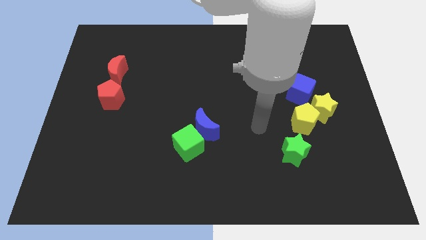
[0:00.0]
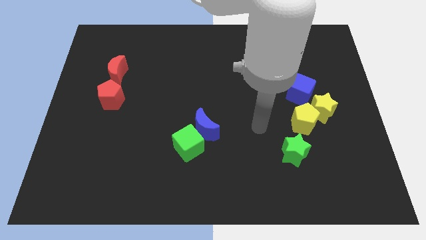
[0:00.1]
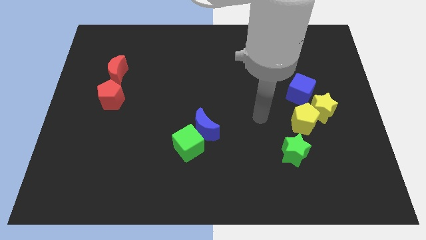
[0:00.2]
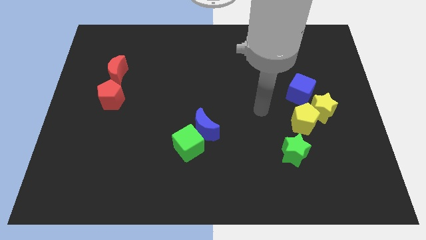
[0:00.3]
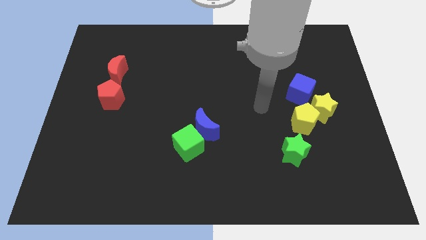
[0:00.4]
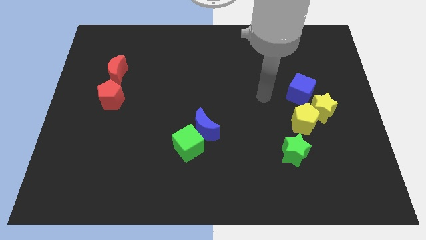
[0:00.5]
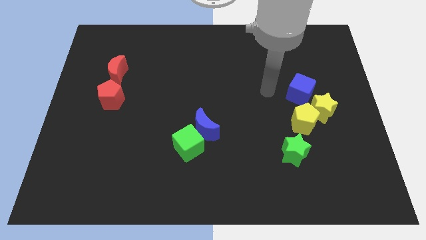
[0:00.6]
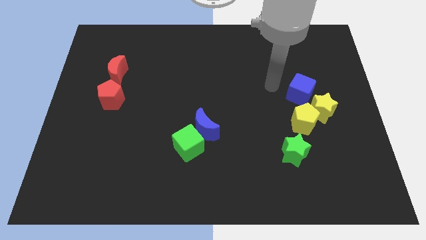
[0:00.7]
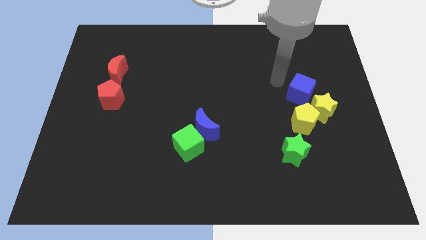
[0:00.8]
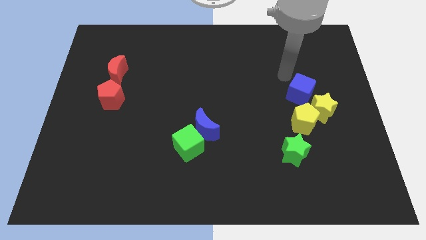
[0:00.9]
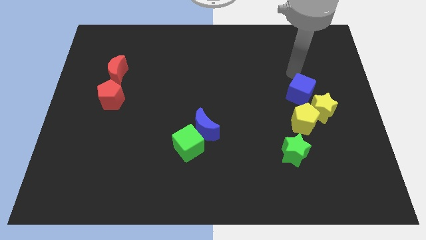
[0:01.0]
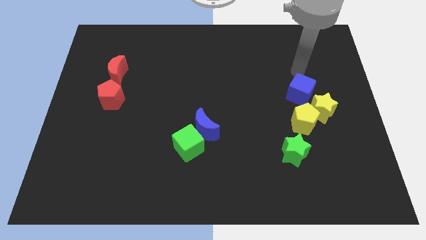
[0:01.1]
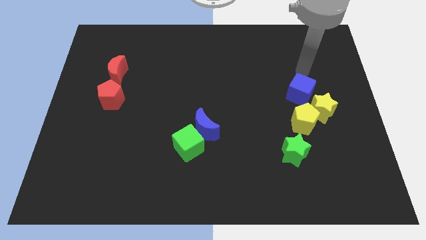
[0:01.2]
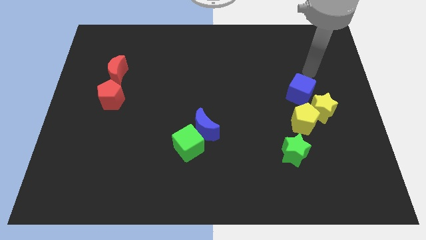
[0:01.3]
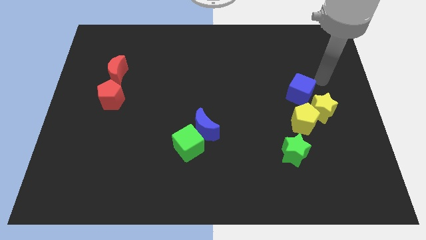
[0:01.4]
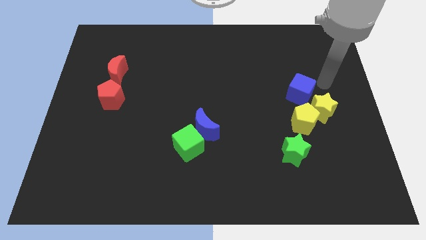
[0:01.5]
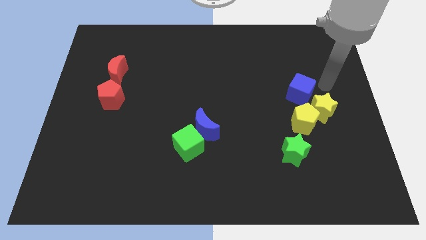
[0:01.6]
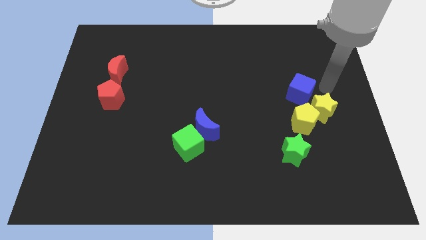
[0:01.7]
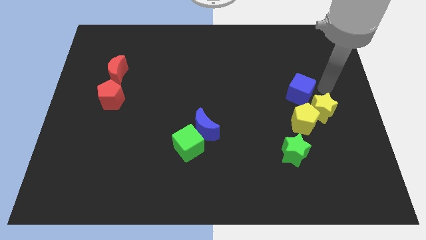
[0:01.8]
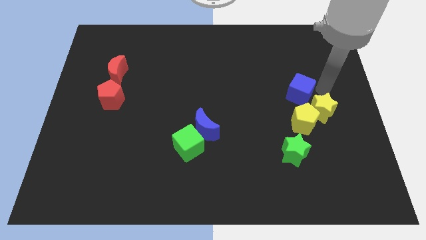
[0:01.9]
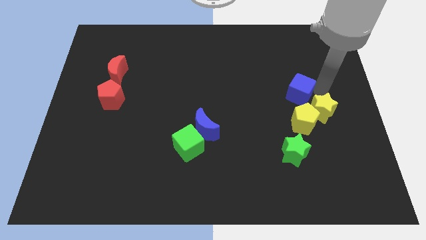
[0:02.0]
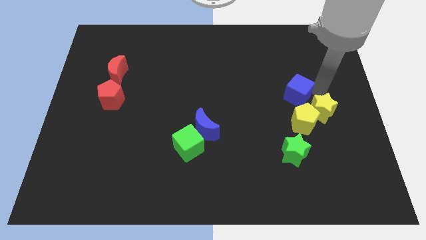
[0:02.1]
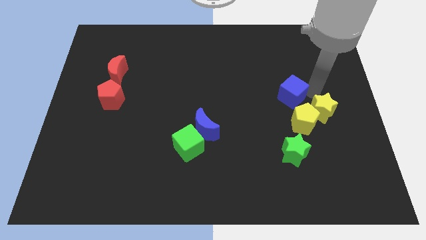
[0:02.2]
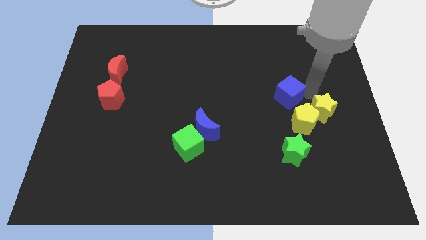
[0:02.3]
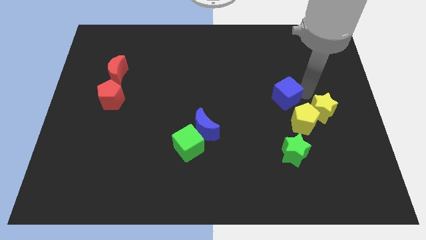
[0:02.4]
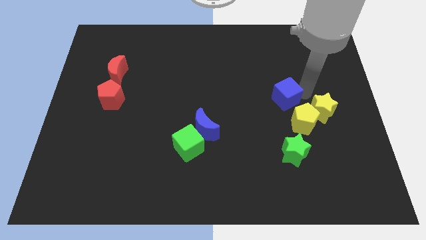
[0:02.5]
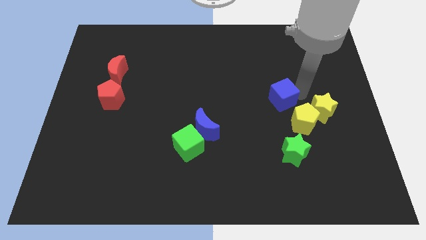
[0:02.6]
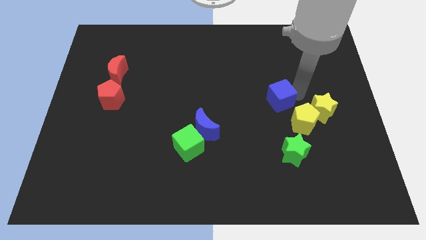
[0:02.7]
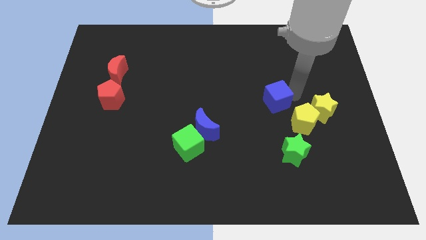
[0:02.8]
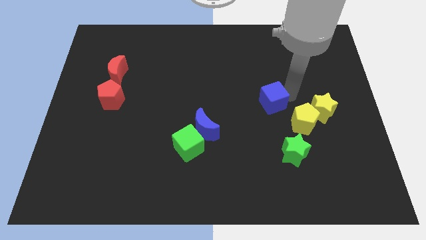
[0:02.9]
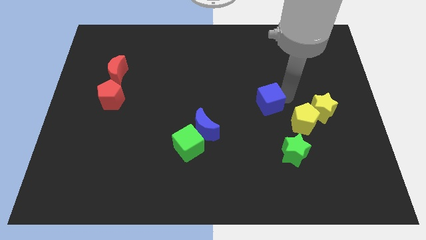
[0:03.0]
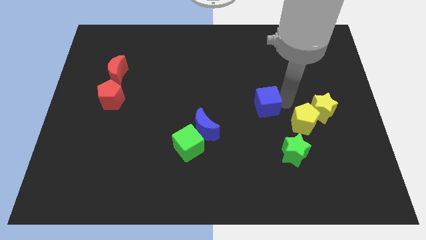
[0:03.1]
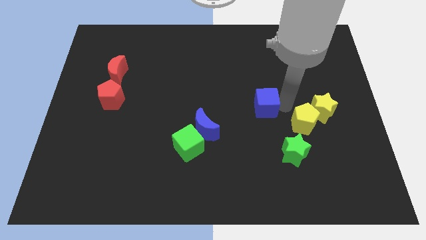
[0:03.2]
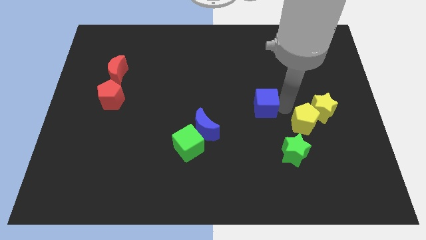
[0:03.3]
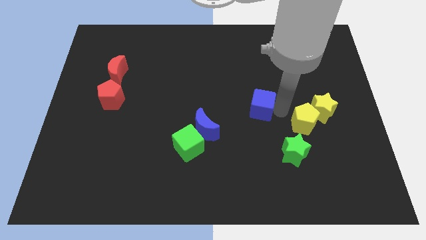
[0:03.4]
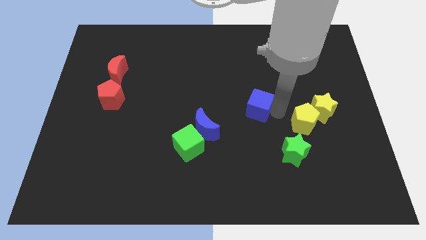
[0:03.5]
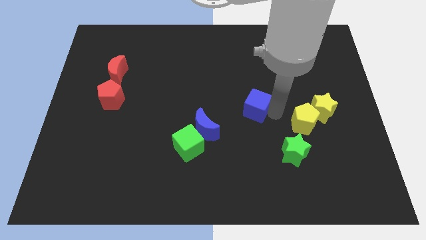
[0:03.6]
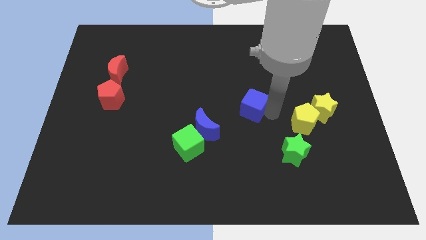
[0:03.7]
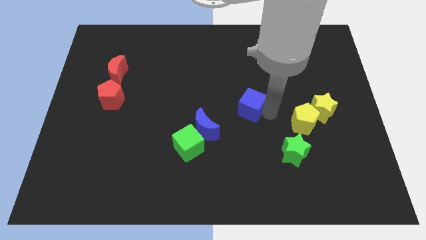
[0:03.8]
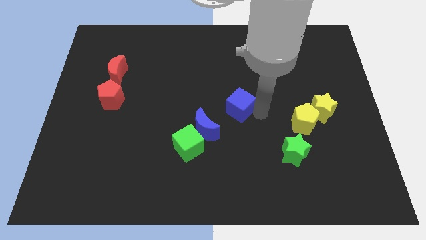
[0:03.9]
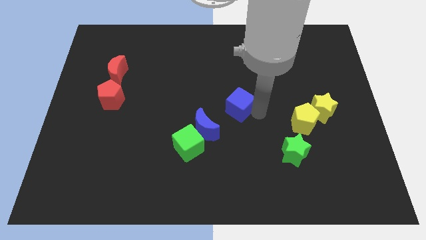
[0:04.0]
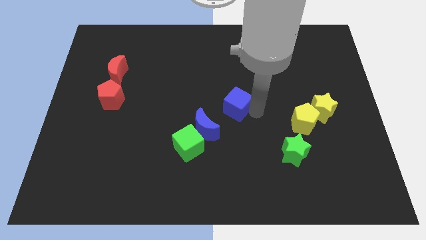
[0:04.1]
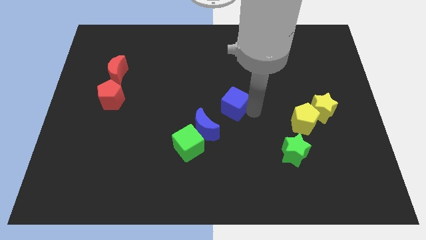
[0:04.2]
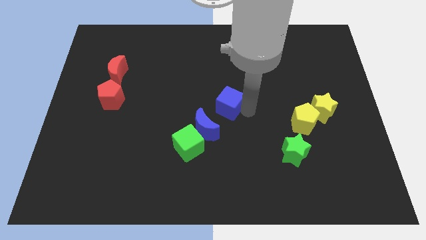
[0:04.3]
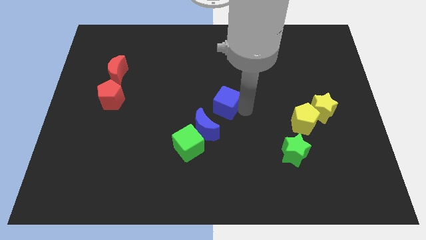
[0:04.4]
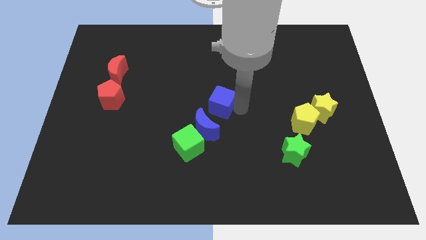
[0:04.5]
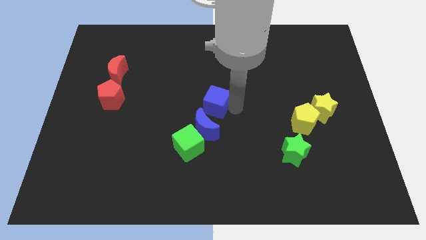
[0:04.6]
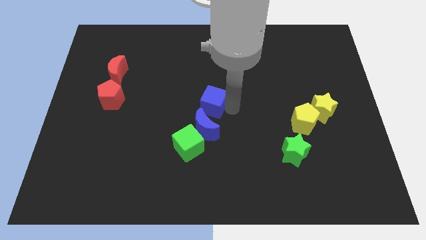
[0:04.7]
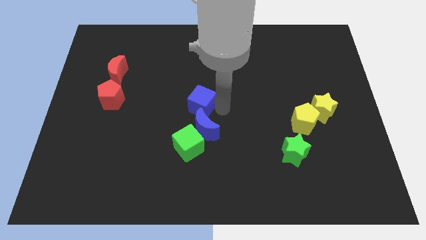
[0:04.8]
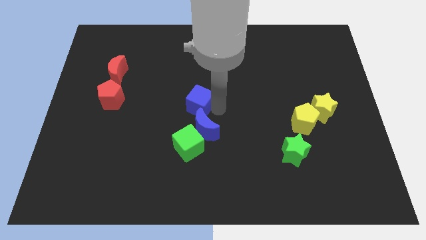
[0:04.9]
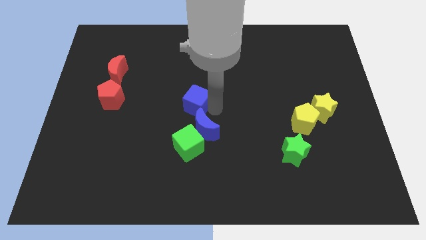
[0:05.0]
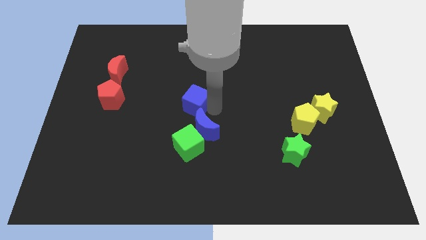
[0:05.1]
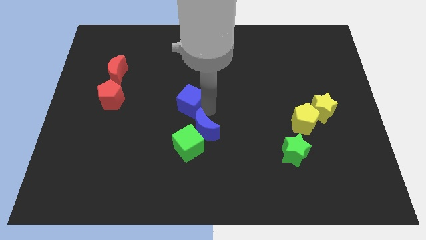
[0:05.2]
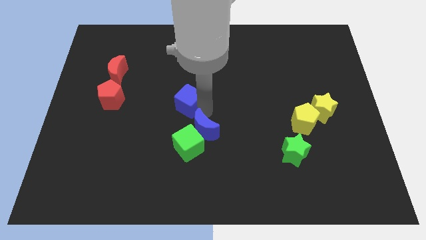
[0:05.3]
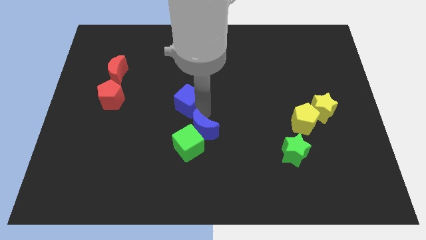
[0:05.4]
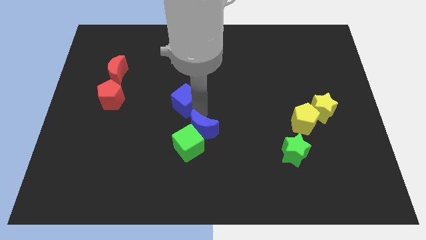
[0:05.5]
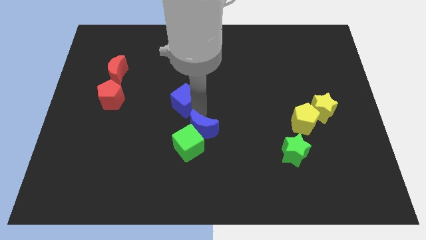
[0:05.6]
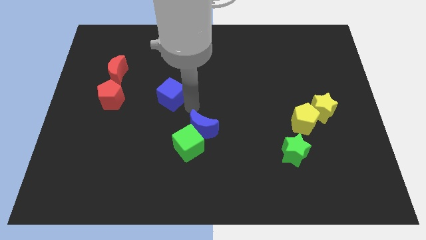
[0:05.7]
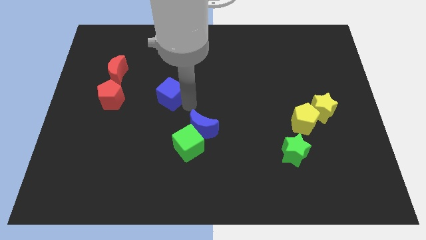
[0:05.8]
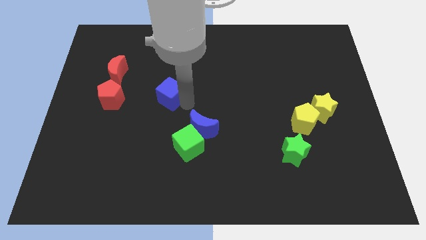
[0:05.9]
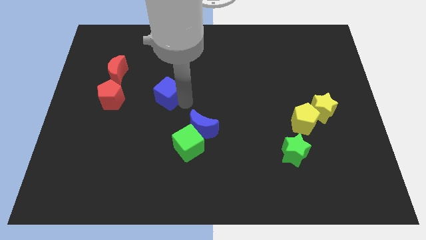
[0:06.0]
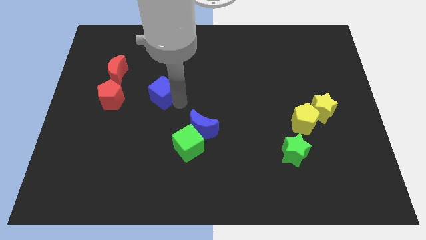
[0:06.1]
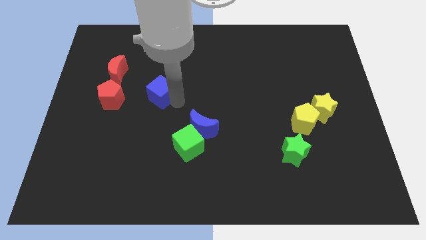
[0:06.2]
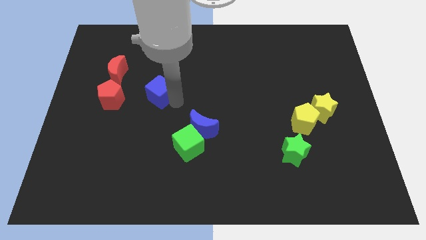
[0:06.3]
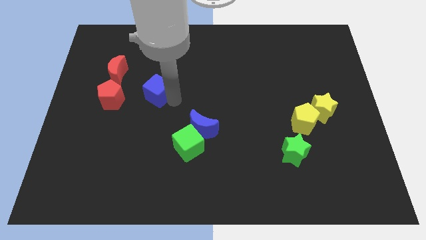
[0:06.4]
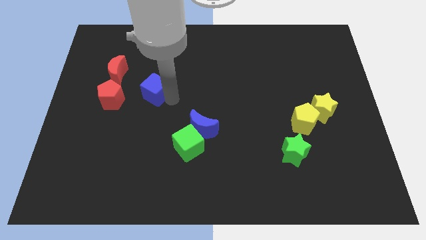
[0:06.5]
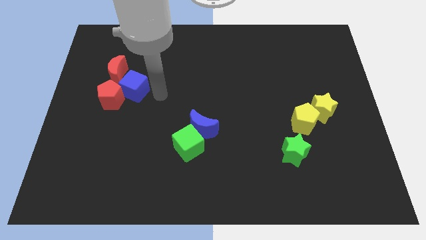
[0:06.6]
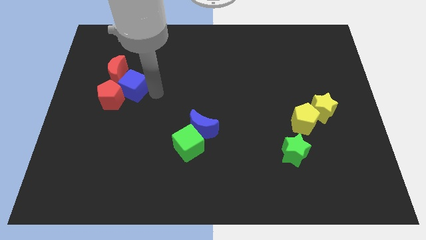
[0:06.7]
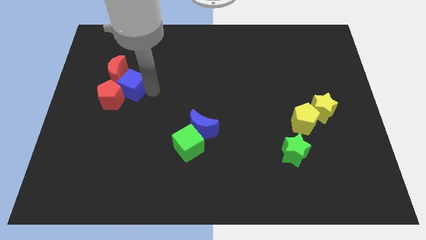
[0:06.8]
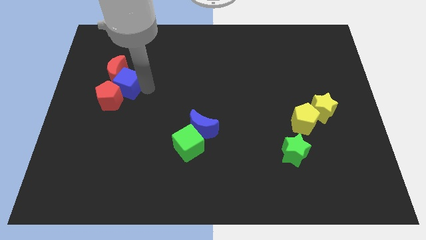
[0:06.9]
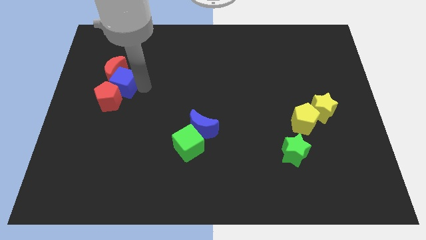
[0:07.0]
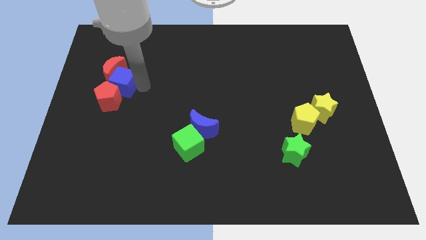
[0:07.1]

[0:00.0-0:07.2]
push the blue cube towards the red moon

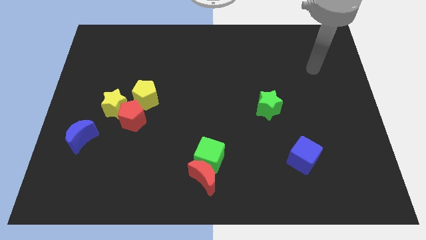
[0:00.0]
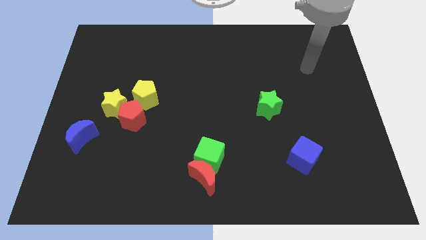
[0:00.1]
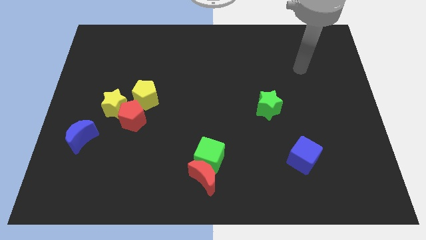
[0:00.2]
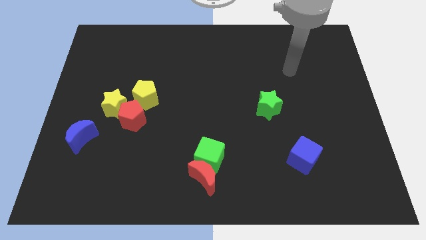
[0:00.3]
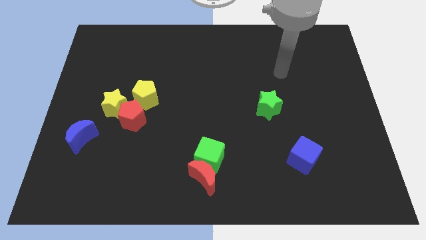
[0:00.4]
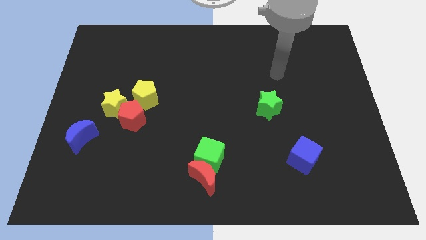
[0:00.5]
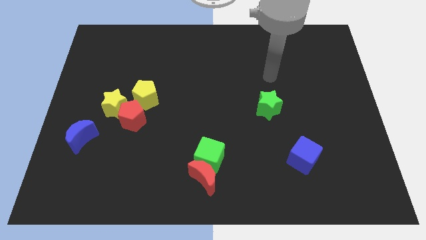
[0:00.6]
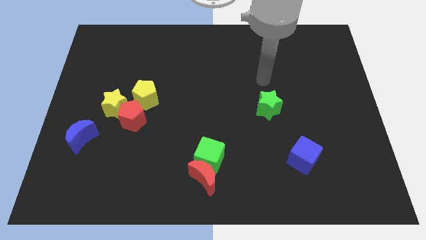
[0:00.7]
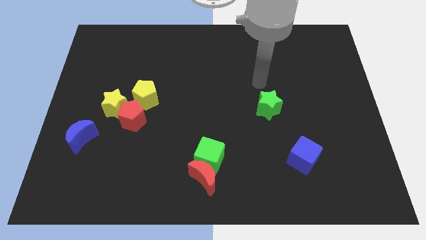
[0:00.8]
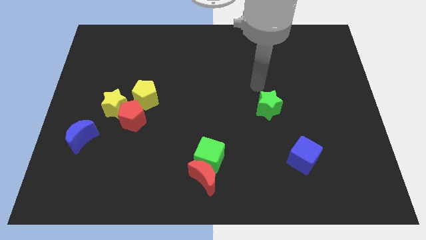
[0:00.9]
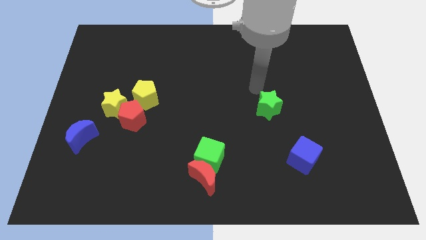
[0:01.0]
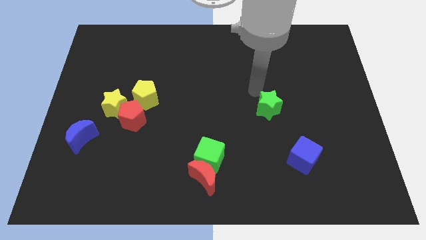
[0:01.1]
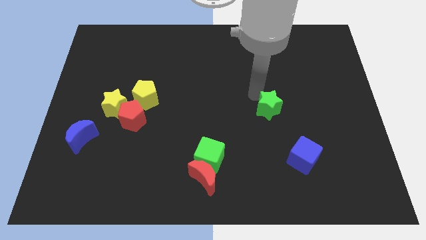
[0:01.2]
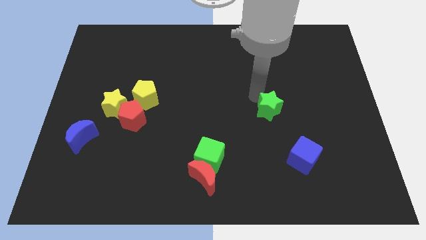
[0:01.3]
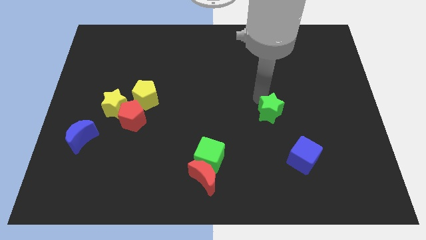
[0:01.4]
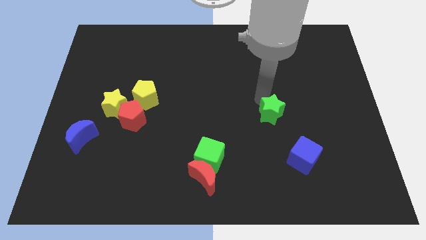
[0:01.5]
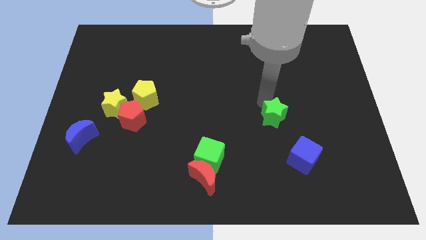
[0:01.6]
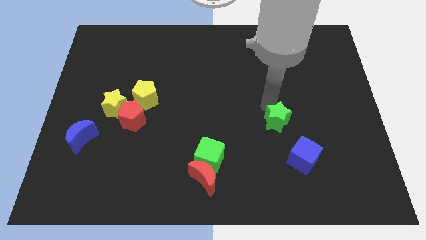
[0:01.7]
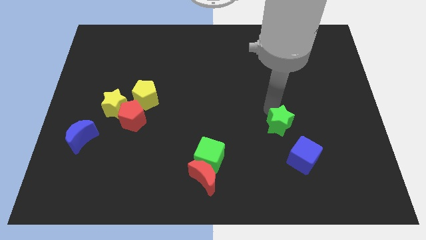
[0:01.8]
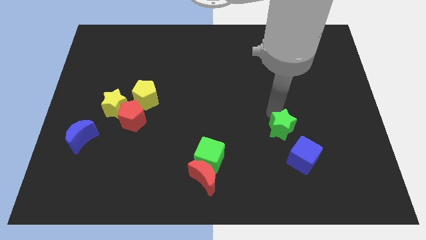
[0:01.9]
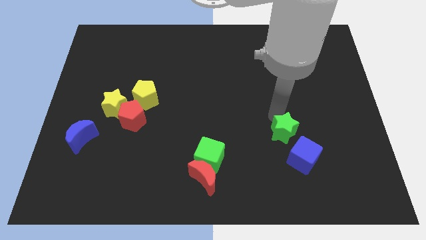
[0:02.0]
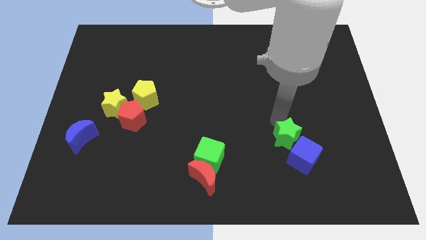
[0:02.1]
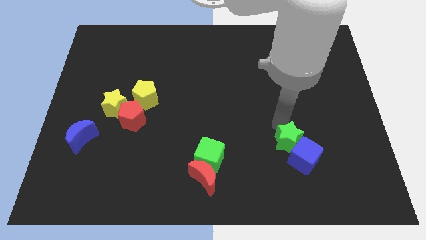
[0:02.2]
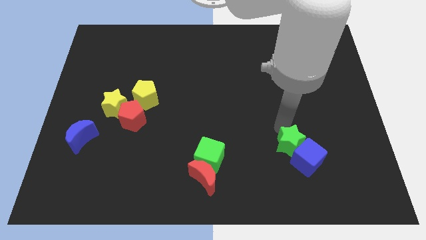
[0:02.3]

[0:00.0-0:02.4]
push the green star next to the blue cube
